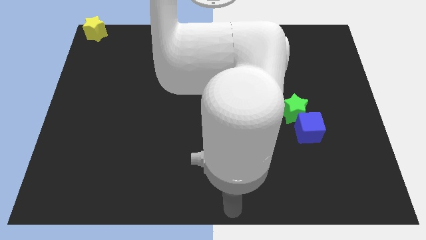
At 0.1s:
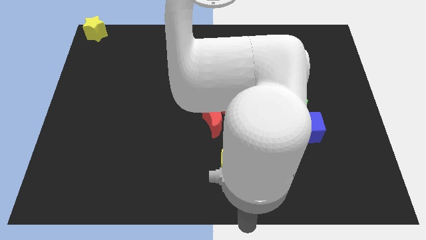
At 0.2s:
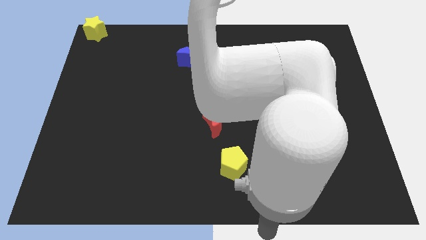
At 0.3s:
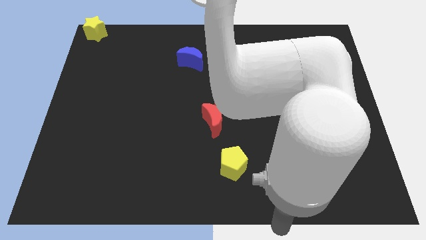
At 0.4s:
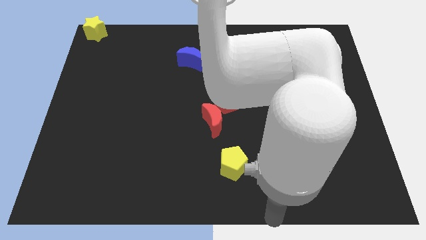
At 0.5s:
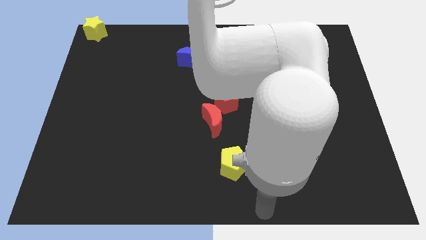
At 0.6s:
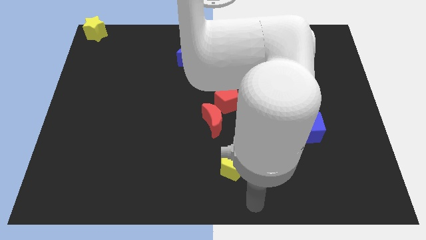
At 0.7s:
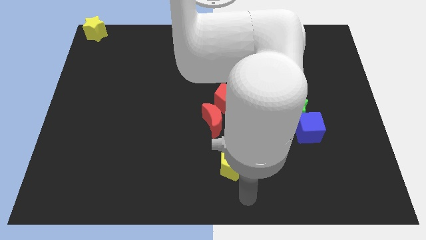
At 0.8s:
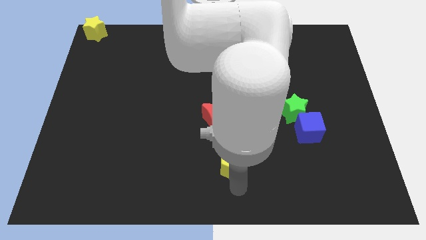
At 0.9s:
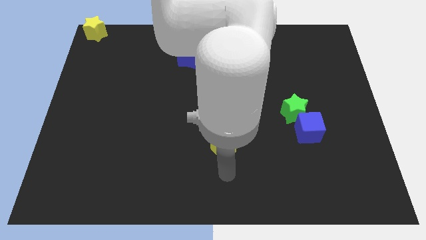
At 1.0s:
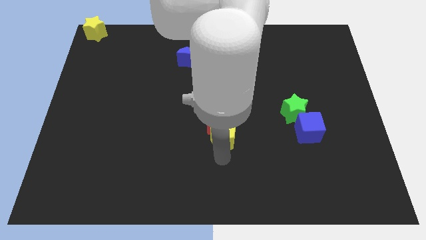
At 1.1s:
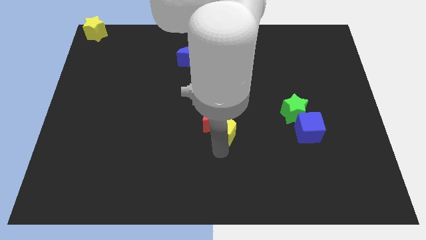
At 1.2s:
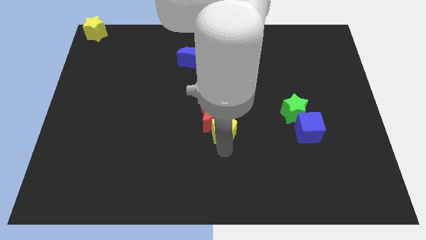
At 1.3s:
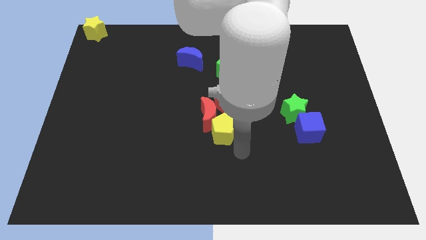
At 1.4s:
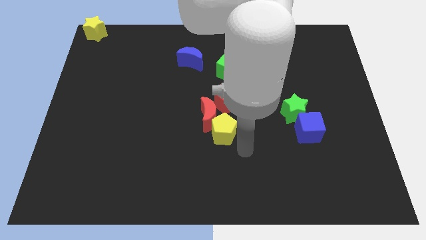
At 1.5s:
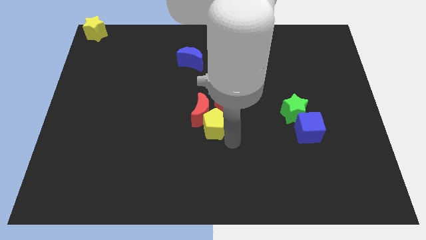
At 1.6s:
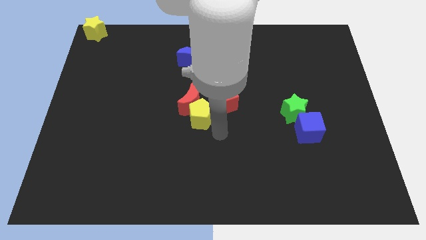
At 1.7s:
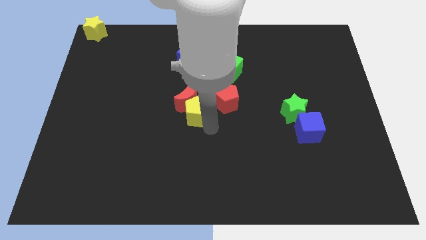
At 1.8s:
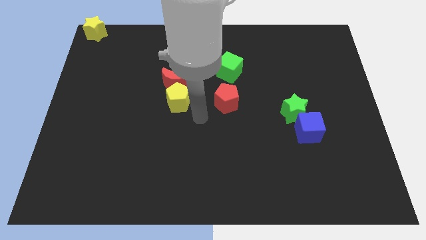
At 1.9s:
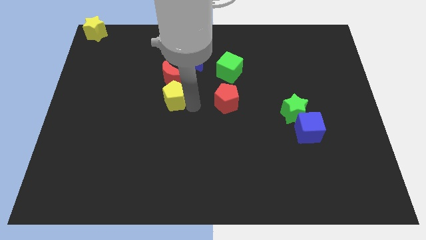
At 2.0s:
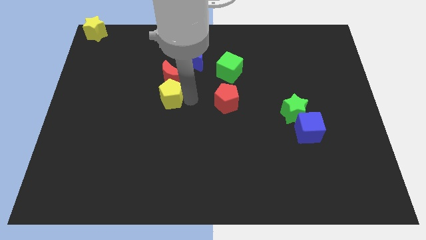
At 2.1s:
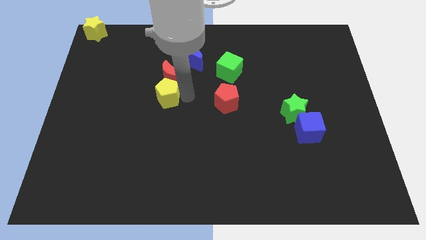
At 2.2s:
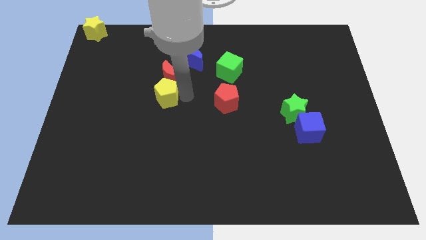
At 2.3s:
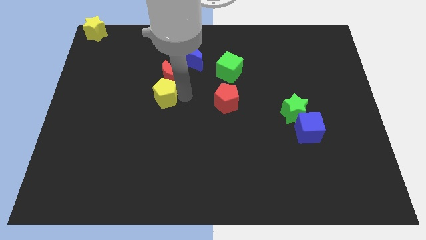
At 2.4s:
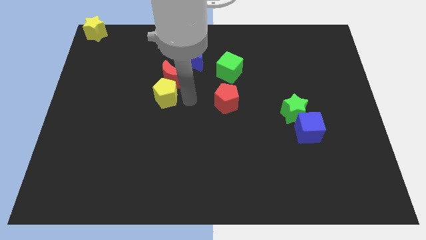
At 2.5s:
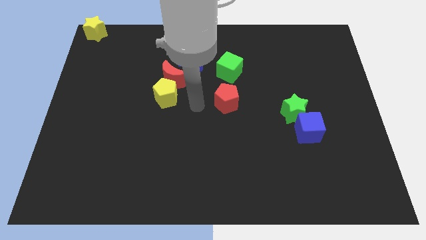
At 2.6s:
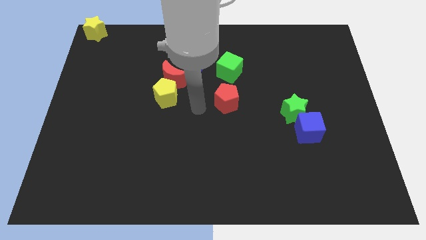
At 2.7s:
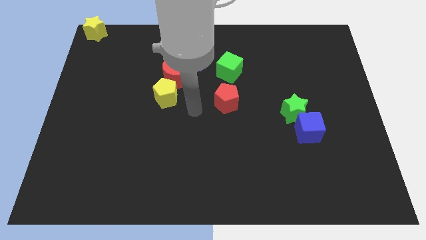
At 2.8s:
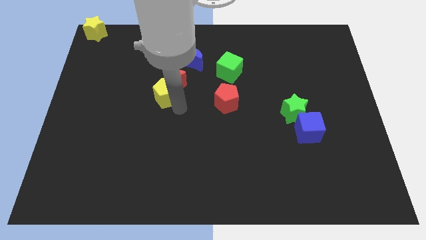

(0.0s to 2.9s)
push the yellow pentagon into red moon

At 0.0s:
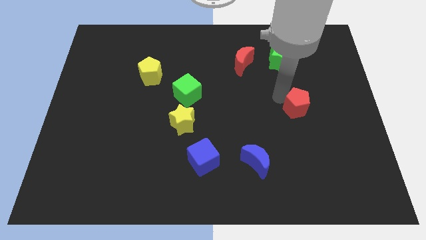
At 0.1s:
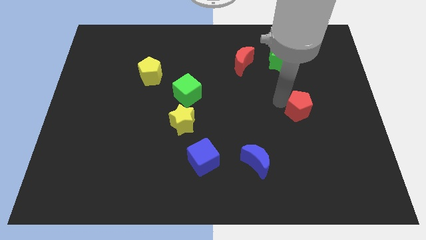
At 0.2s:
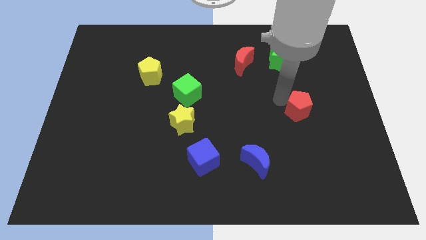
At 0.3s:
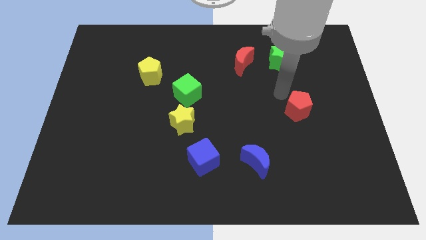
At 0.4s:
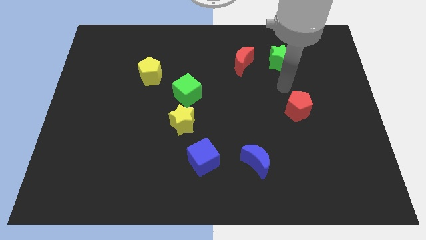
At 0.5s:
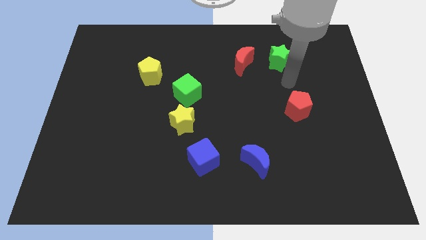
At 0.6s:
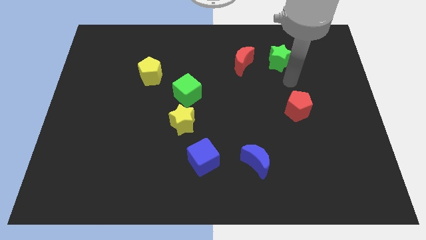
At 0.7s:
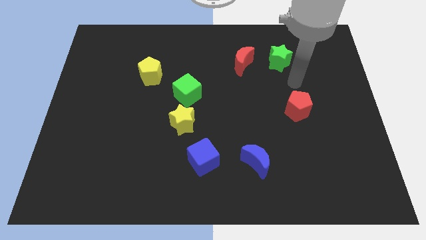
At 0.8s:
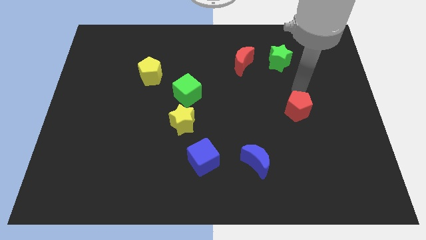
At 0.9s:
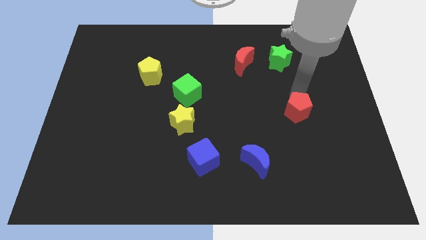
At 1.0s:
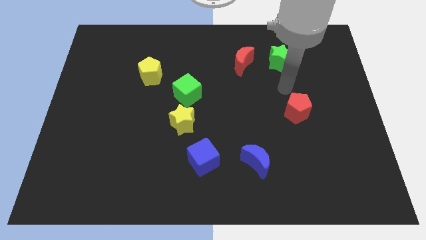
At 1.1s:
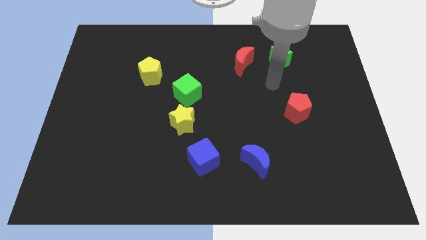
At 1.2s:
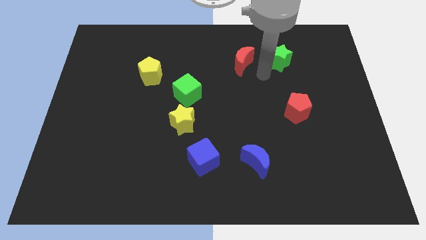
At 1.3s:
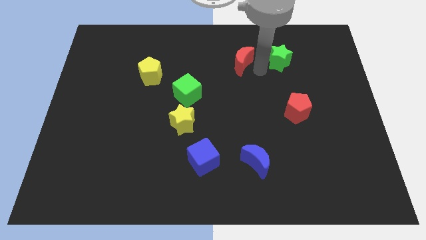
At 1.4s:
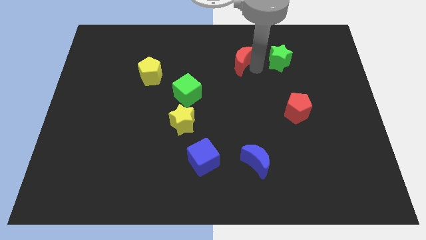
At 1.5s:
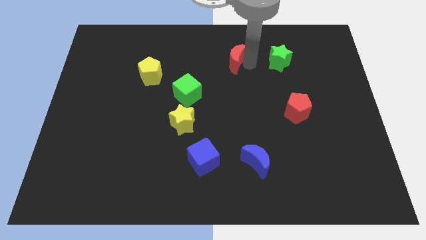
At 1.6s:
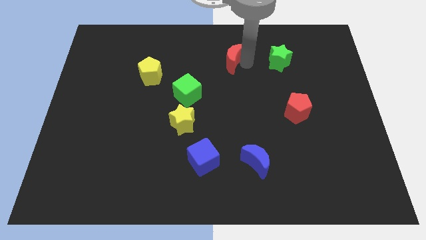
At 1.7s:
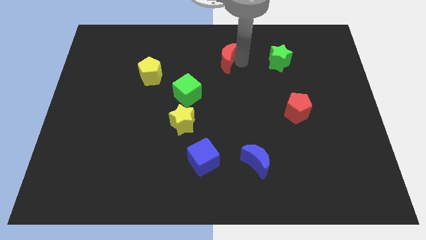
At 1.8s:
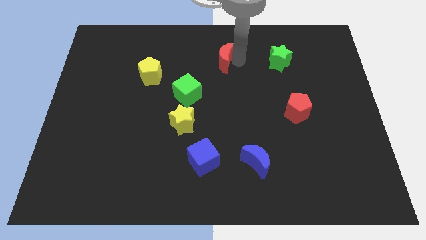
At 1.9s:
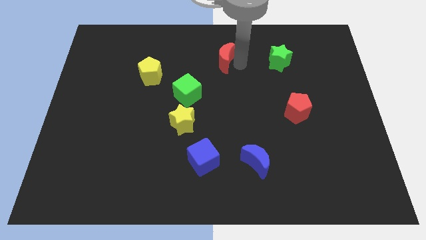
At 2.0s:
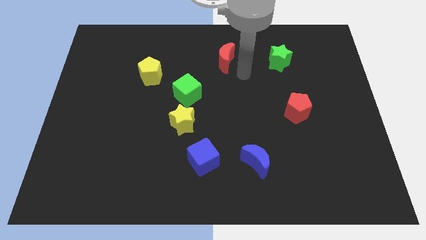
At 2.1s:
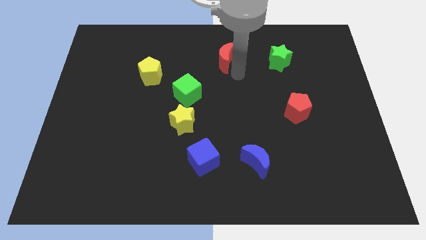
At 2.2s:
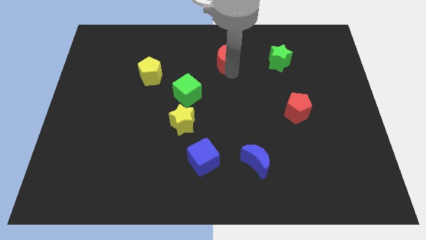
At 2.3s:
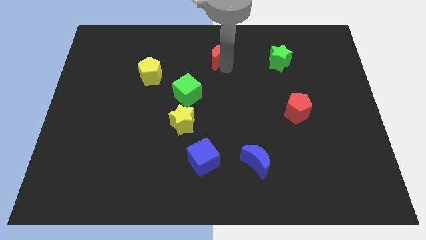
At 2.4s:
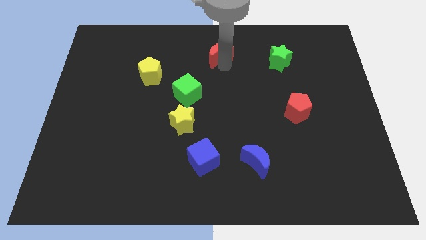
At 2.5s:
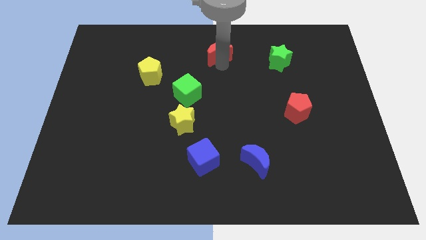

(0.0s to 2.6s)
push the red crescent to the top right of the green cube

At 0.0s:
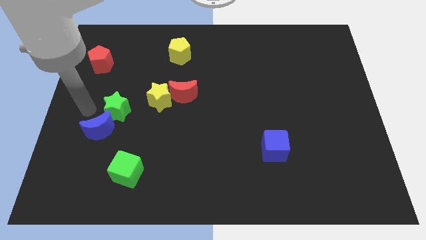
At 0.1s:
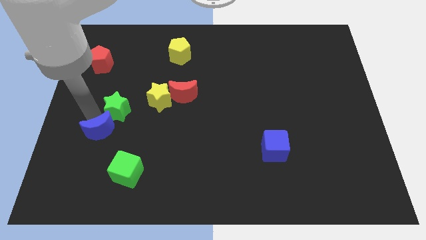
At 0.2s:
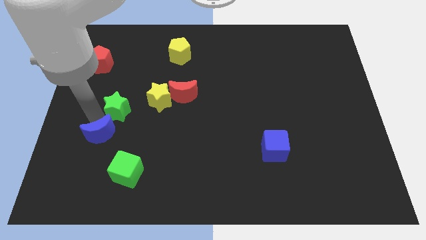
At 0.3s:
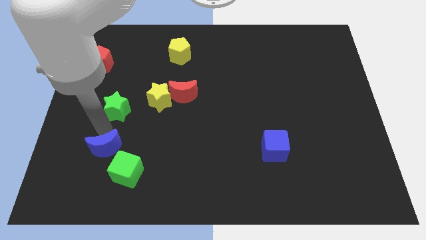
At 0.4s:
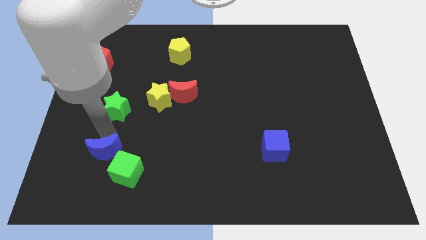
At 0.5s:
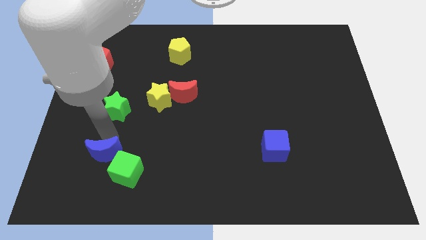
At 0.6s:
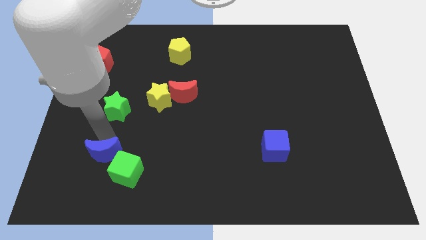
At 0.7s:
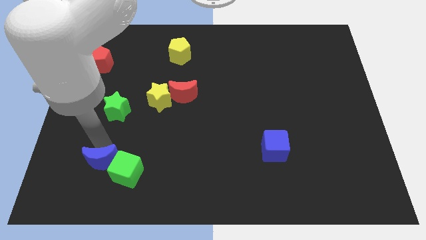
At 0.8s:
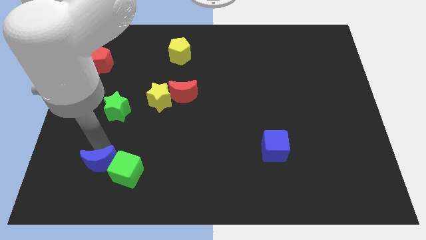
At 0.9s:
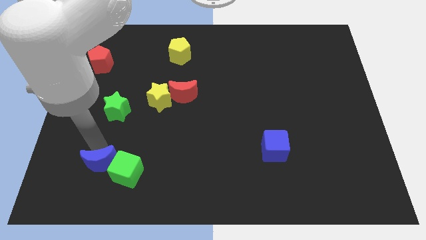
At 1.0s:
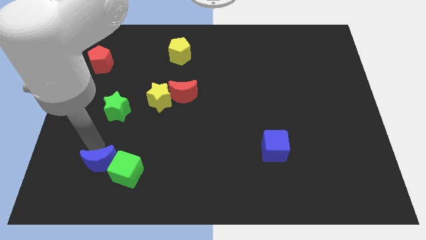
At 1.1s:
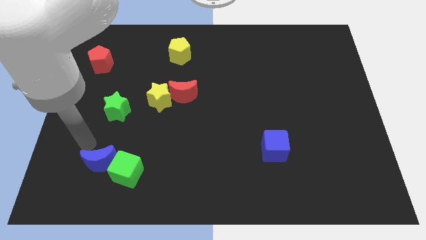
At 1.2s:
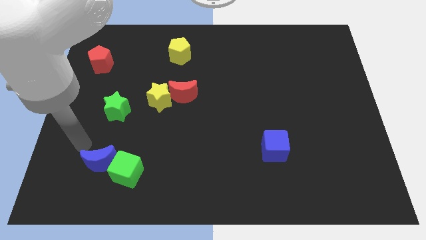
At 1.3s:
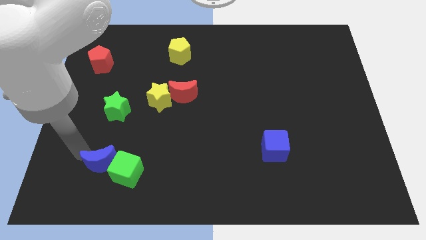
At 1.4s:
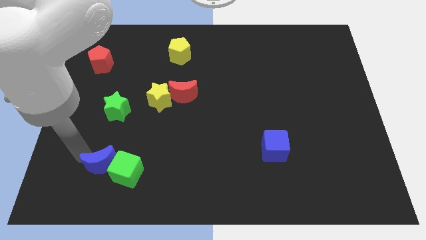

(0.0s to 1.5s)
place the blue crescent towards the left side of the green cube

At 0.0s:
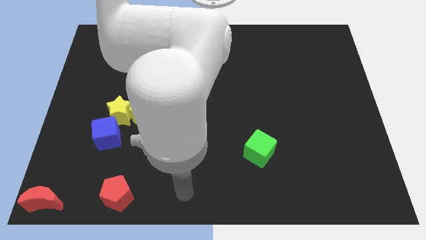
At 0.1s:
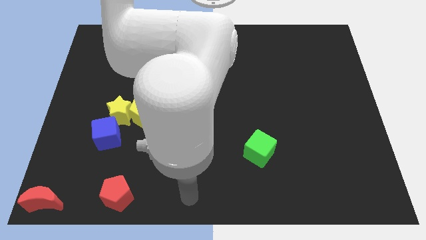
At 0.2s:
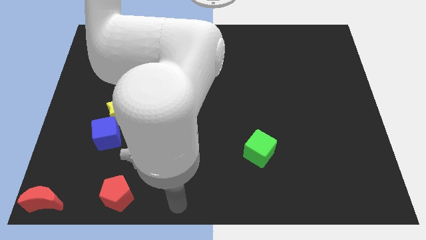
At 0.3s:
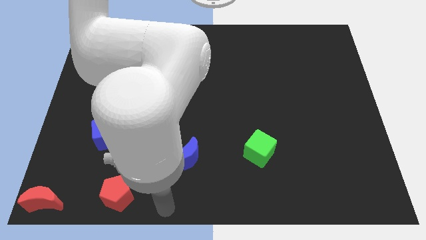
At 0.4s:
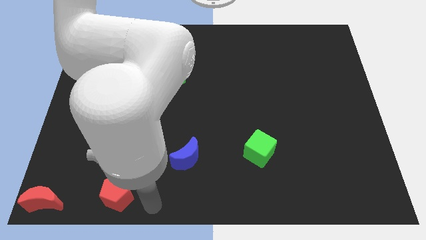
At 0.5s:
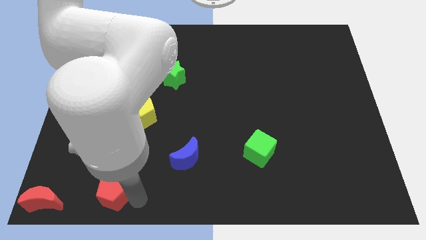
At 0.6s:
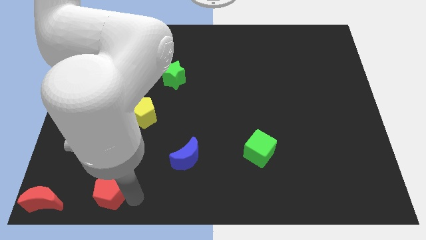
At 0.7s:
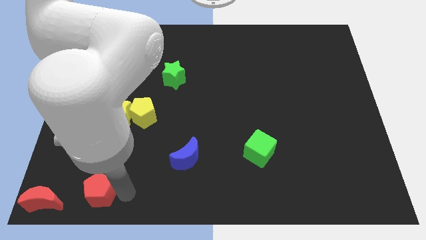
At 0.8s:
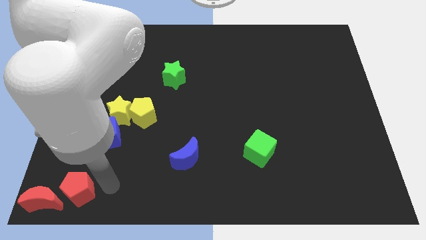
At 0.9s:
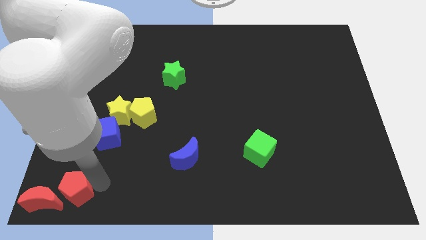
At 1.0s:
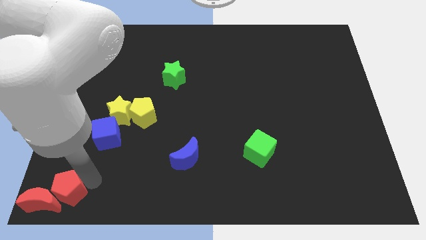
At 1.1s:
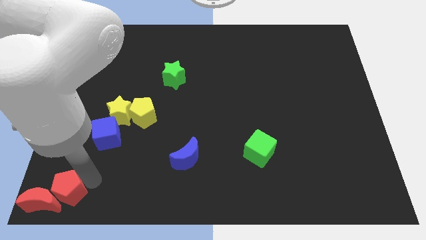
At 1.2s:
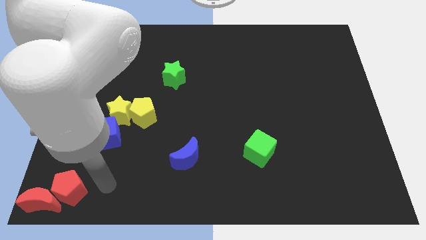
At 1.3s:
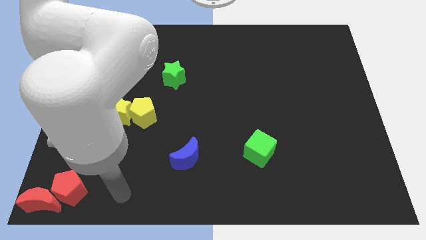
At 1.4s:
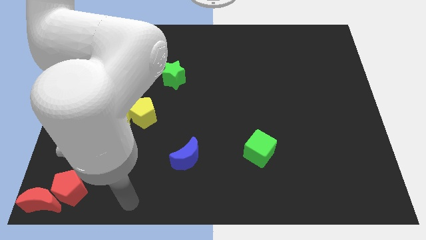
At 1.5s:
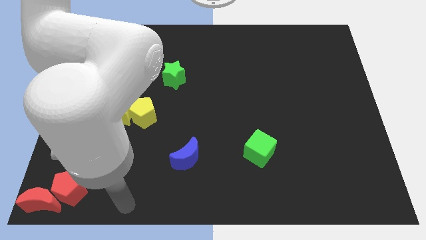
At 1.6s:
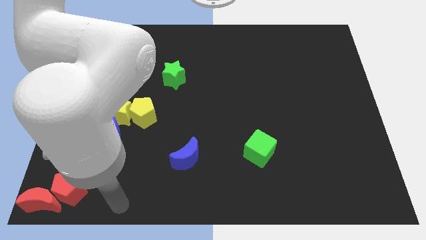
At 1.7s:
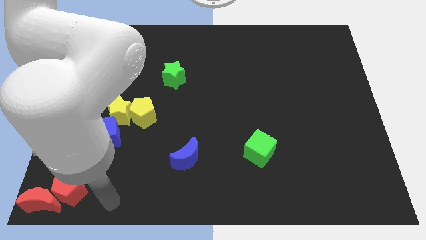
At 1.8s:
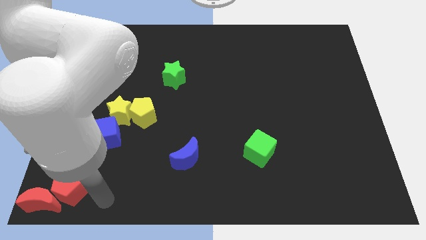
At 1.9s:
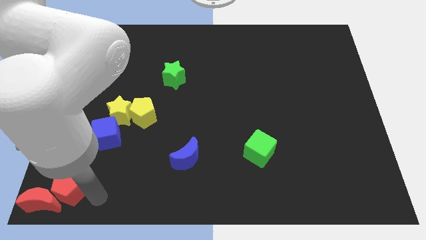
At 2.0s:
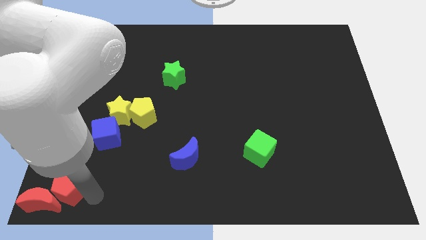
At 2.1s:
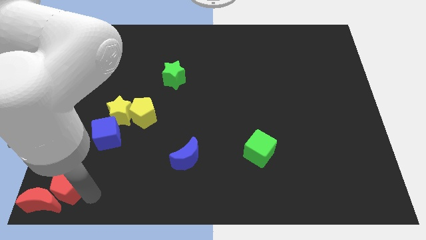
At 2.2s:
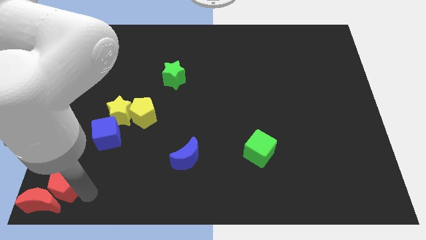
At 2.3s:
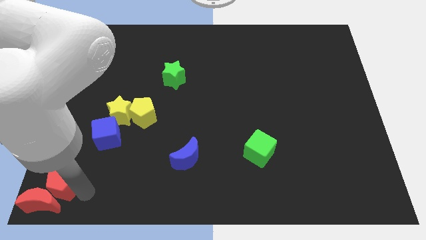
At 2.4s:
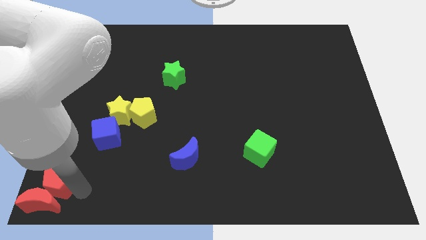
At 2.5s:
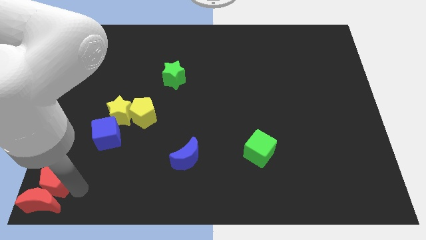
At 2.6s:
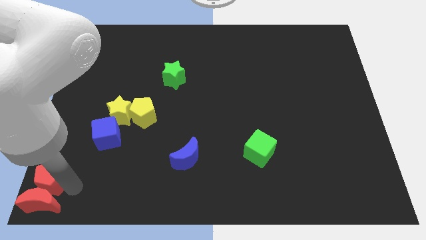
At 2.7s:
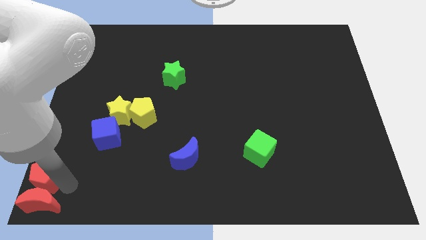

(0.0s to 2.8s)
place the red pentagon above red moon
